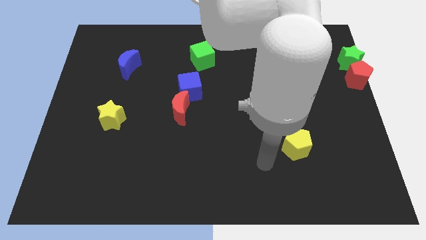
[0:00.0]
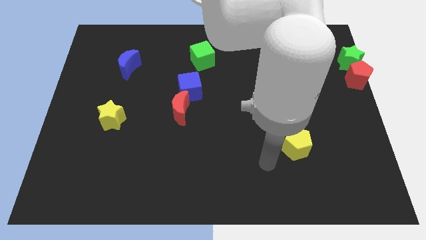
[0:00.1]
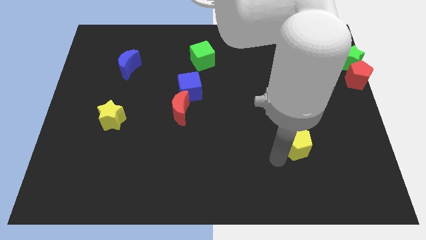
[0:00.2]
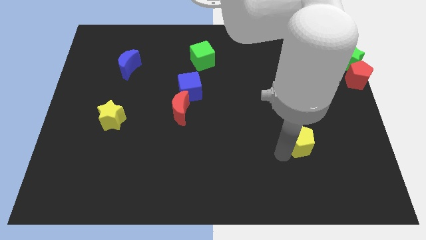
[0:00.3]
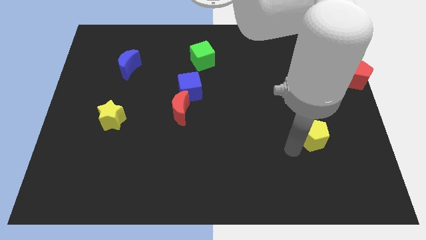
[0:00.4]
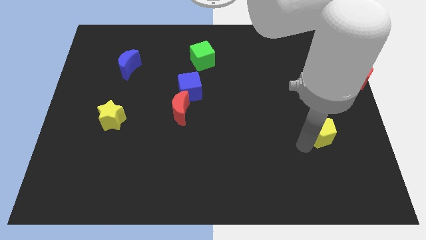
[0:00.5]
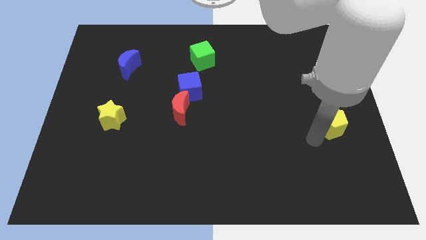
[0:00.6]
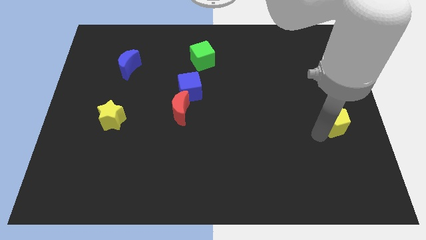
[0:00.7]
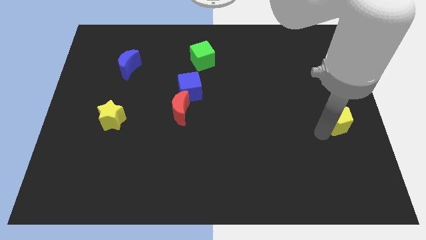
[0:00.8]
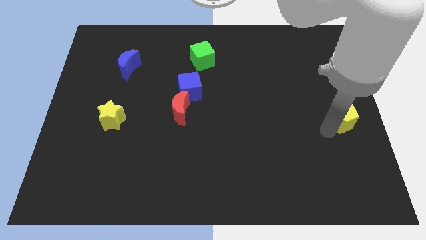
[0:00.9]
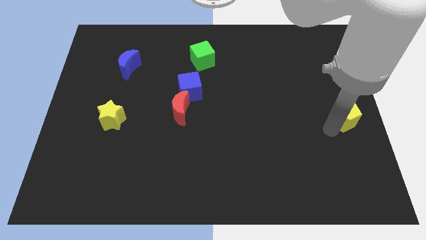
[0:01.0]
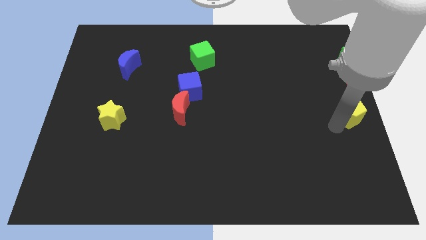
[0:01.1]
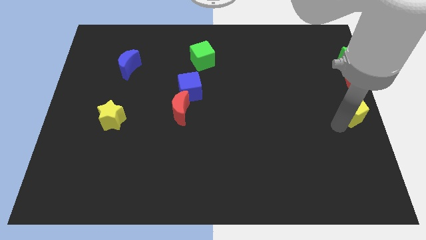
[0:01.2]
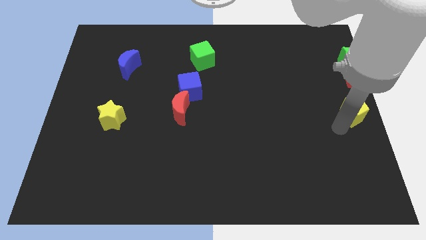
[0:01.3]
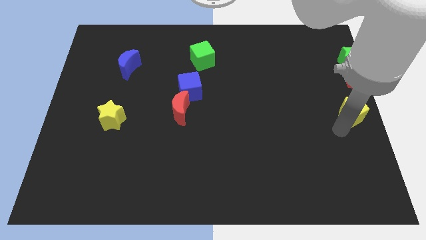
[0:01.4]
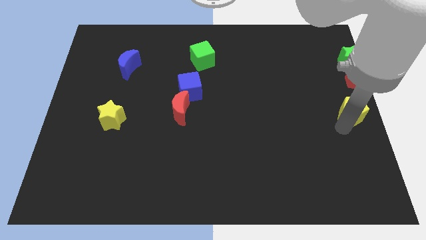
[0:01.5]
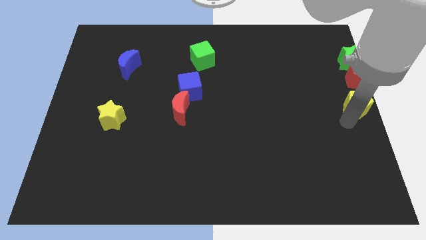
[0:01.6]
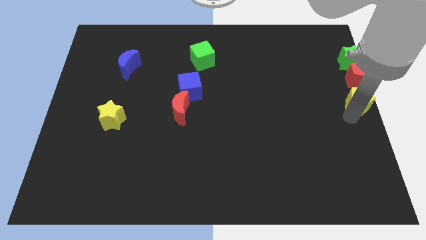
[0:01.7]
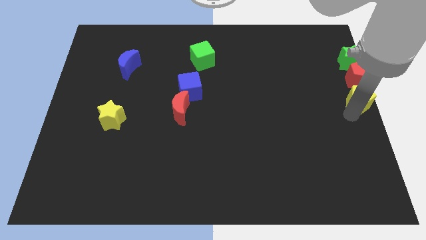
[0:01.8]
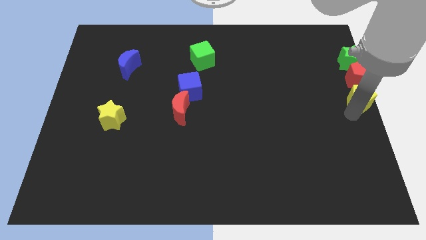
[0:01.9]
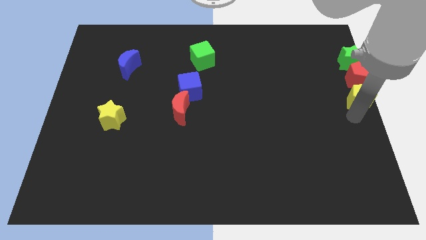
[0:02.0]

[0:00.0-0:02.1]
place the yellow pentagon below the red pentagon

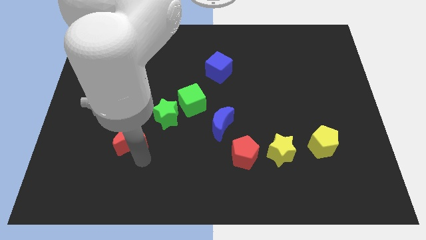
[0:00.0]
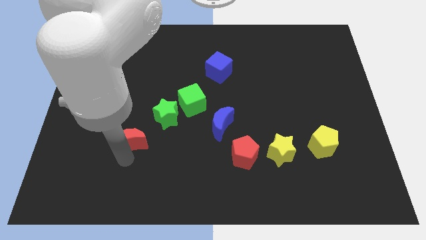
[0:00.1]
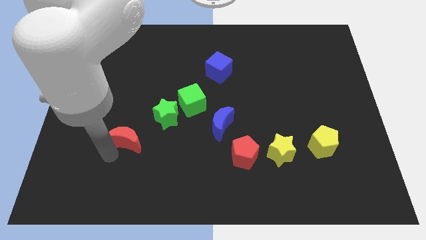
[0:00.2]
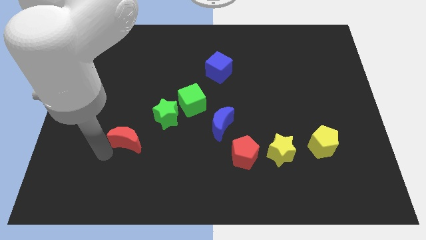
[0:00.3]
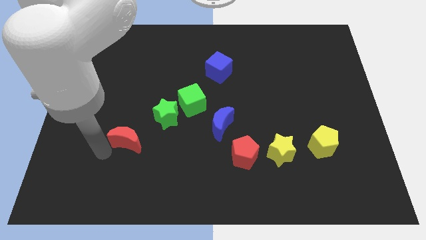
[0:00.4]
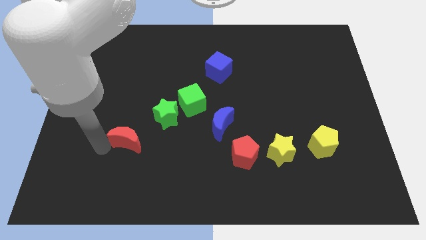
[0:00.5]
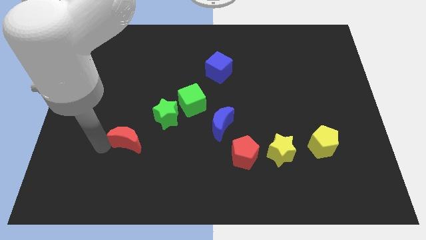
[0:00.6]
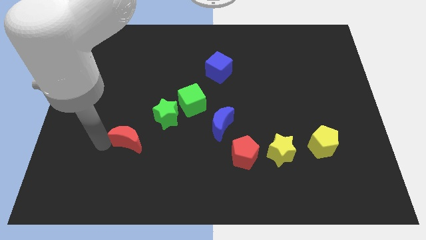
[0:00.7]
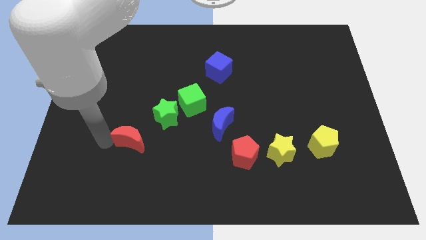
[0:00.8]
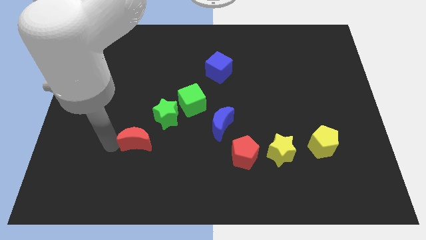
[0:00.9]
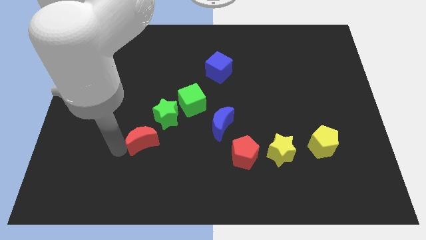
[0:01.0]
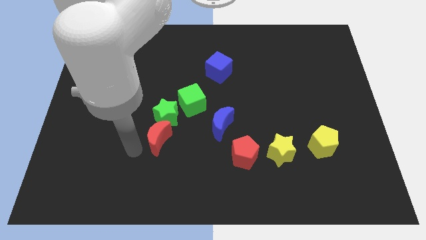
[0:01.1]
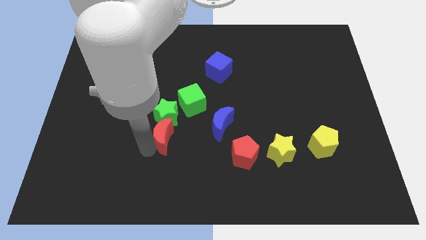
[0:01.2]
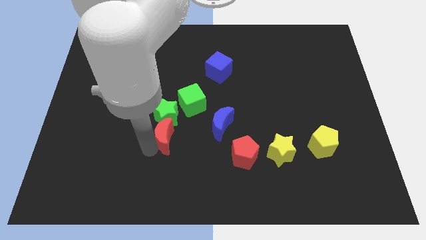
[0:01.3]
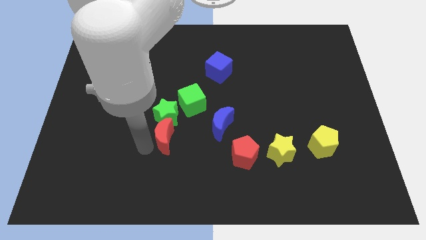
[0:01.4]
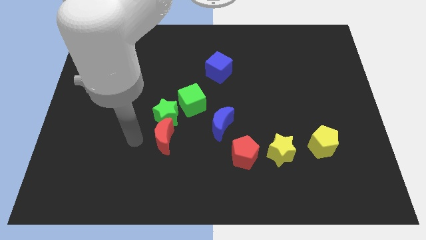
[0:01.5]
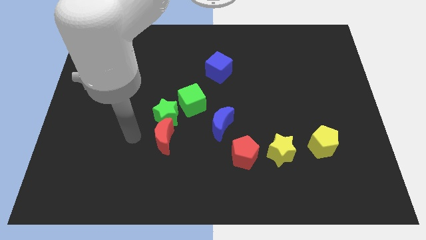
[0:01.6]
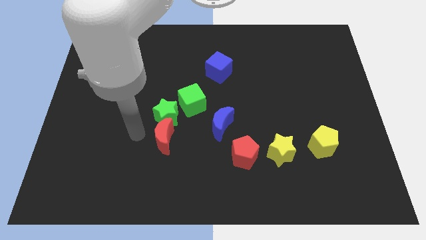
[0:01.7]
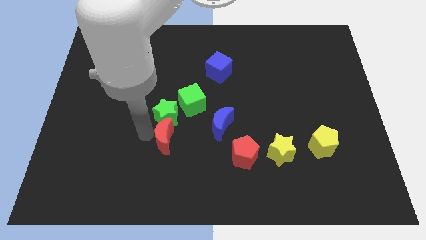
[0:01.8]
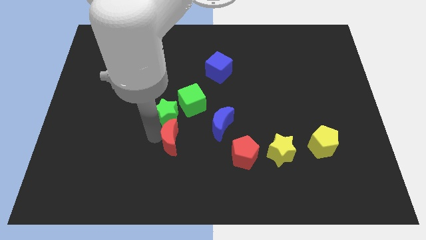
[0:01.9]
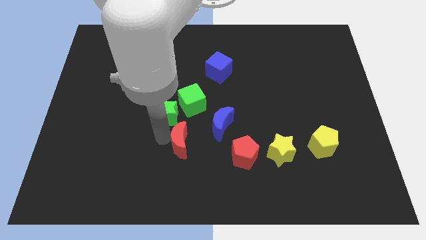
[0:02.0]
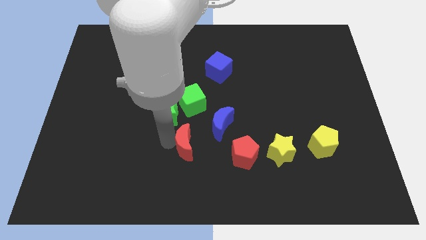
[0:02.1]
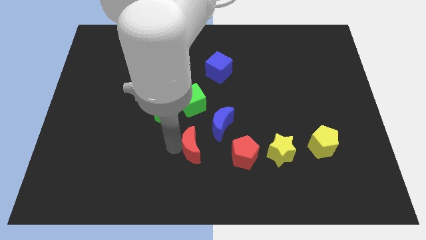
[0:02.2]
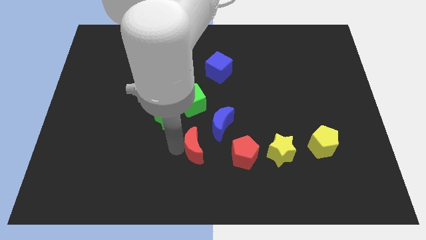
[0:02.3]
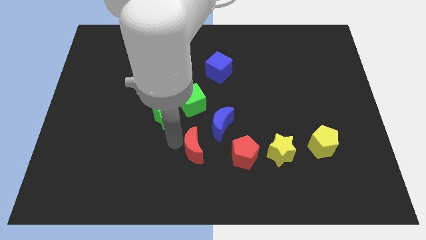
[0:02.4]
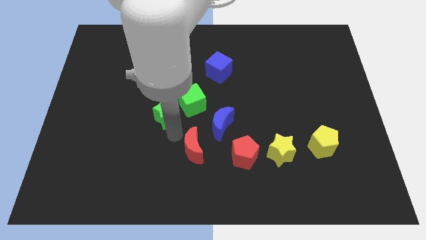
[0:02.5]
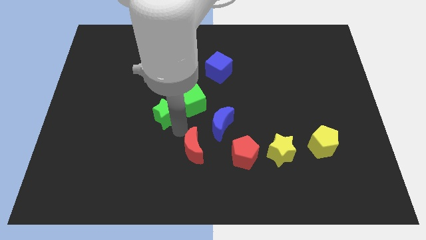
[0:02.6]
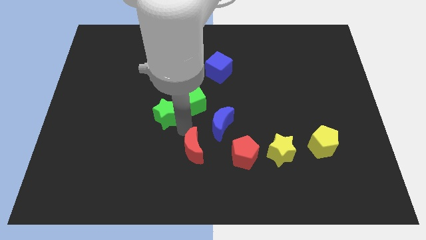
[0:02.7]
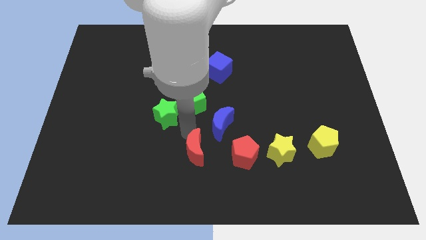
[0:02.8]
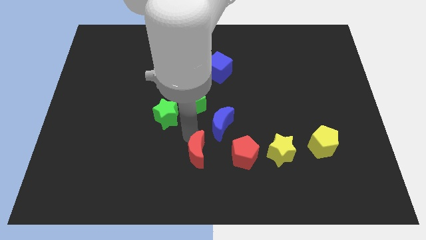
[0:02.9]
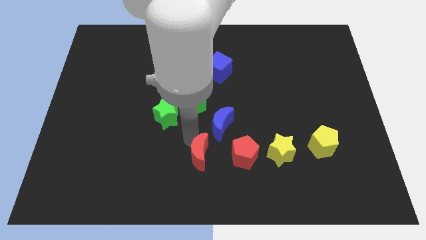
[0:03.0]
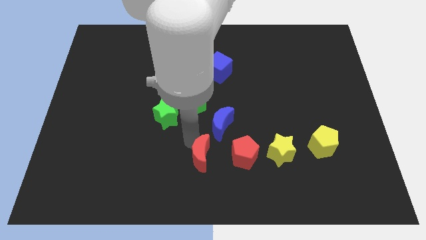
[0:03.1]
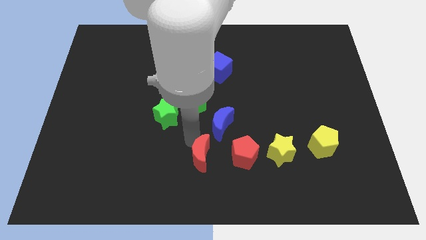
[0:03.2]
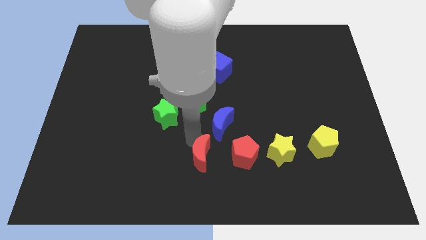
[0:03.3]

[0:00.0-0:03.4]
move the red moon diagonally to the blue moon

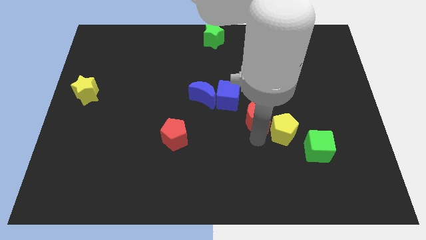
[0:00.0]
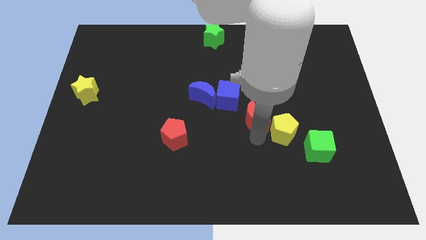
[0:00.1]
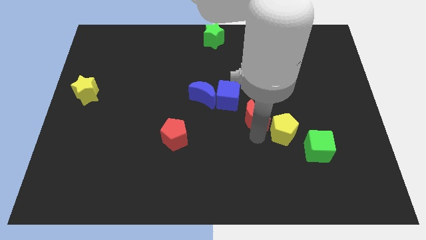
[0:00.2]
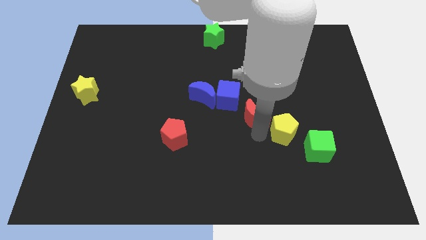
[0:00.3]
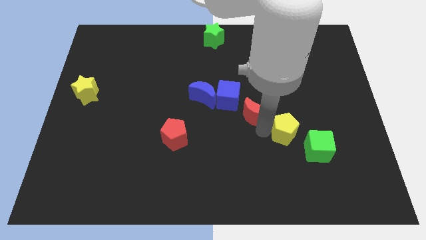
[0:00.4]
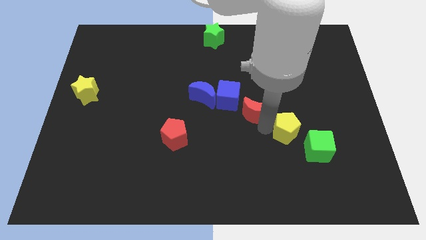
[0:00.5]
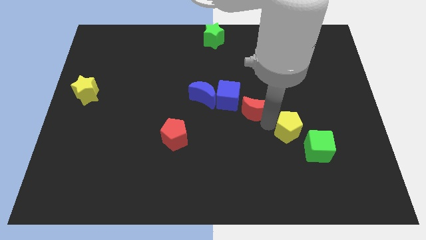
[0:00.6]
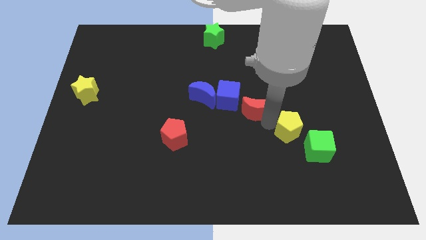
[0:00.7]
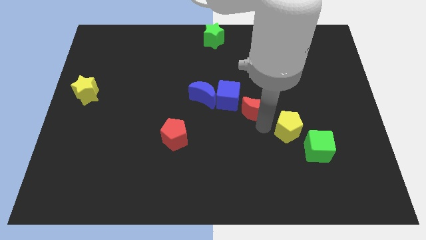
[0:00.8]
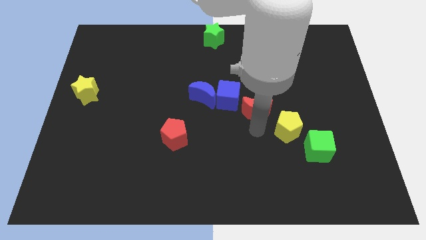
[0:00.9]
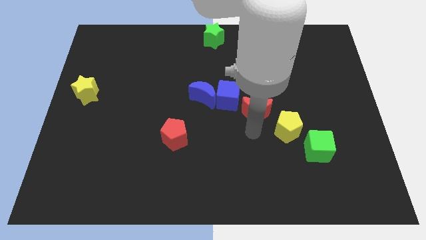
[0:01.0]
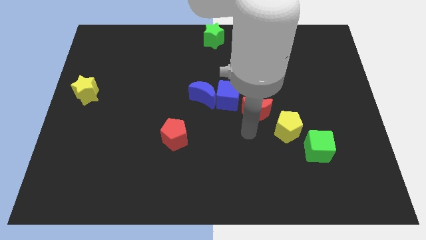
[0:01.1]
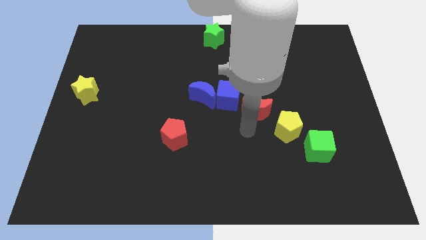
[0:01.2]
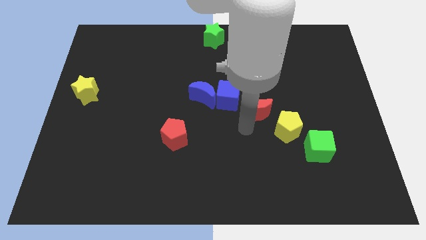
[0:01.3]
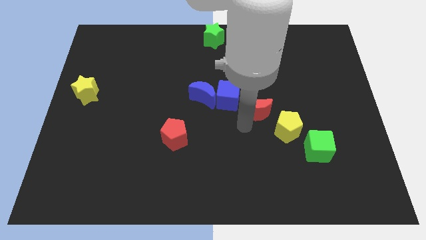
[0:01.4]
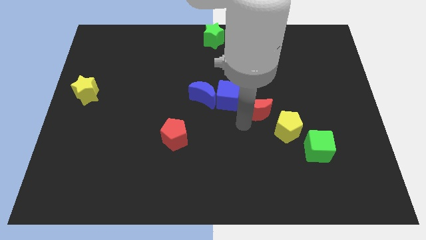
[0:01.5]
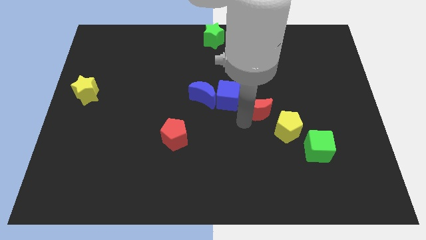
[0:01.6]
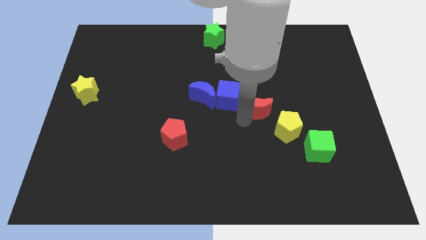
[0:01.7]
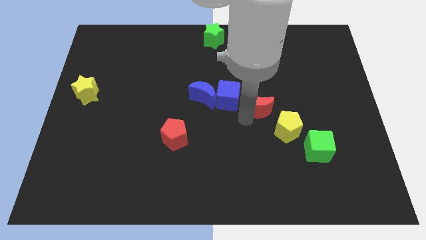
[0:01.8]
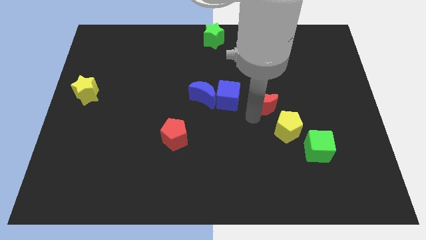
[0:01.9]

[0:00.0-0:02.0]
move the red crescent to the right of the blue cube

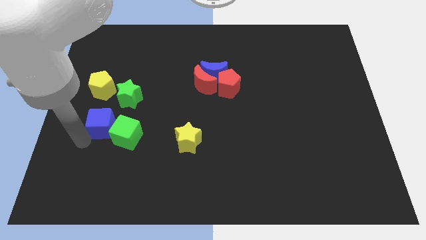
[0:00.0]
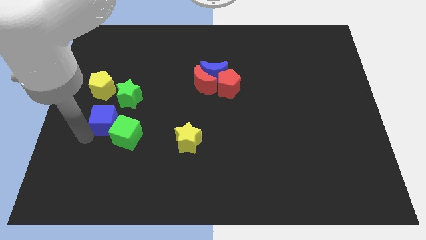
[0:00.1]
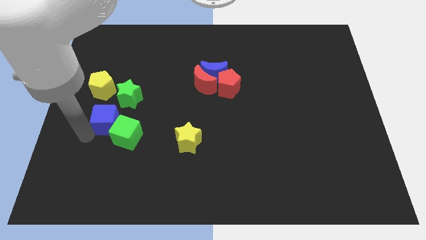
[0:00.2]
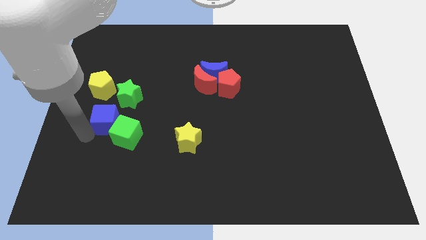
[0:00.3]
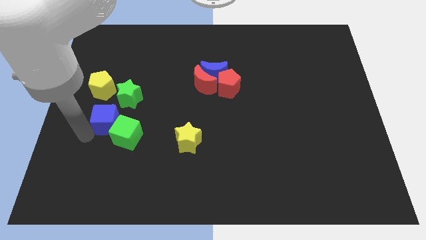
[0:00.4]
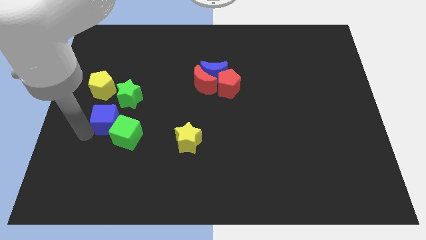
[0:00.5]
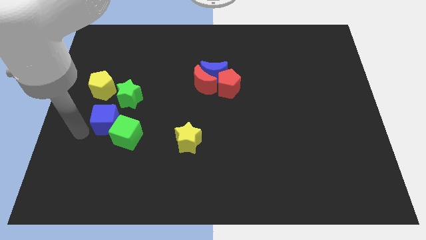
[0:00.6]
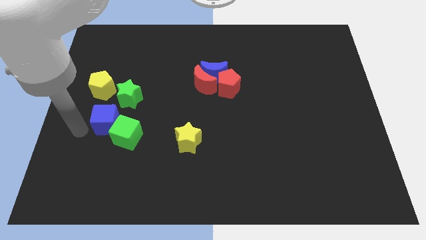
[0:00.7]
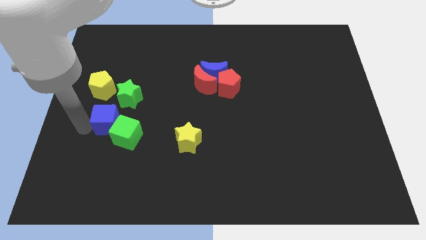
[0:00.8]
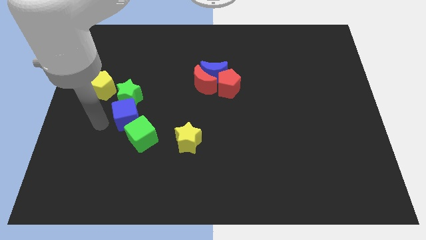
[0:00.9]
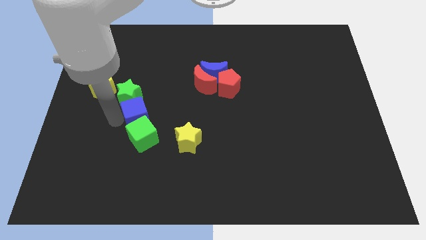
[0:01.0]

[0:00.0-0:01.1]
push the blue cube in between the green blocks

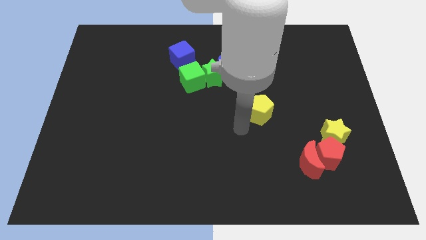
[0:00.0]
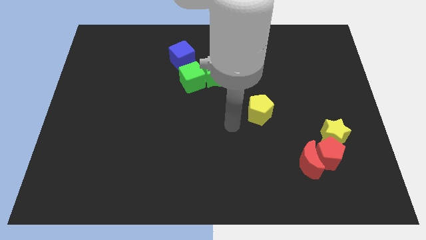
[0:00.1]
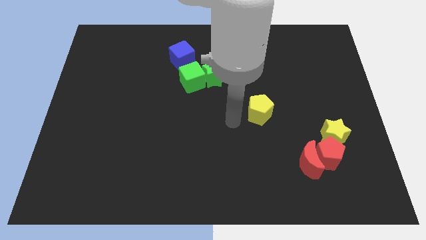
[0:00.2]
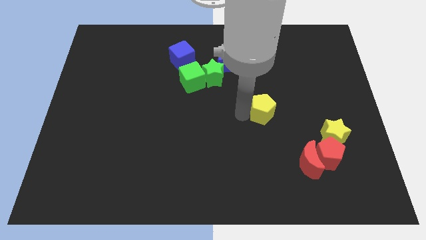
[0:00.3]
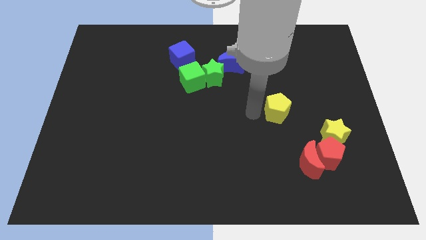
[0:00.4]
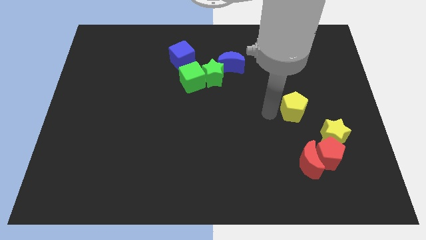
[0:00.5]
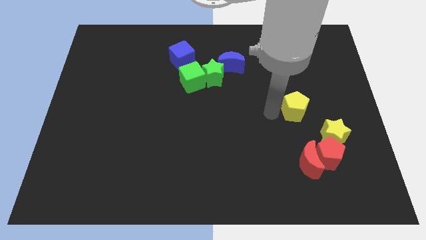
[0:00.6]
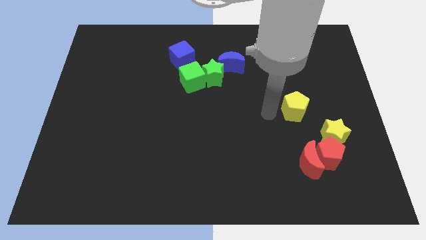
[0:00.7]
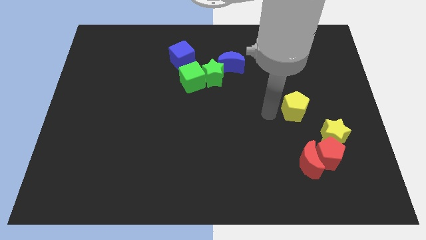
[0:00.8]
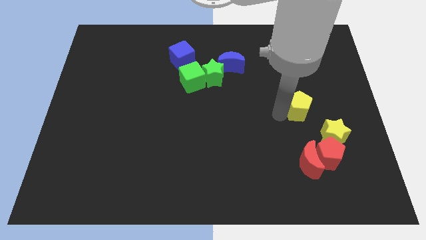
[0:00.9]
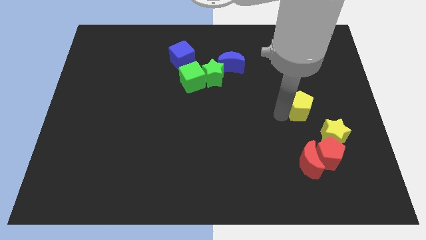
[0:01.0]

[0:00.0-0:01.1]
place the yellow pentagon at the top left of the yellow star
